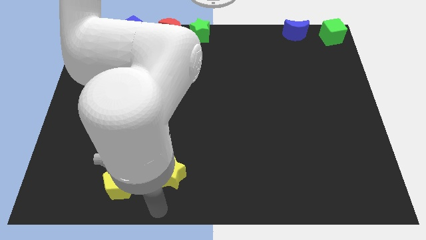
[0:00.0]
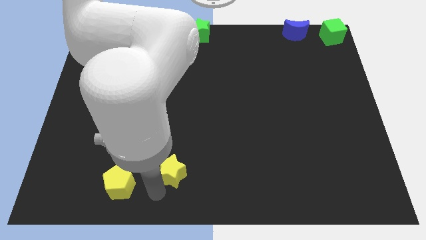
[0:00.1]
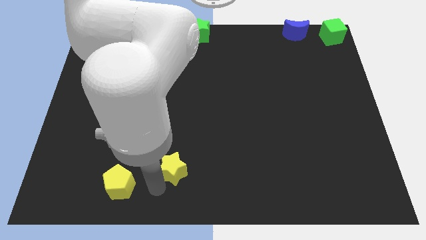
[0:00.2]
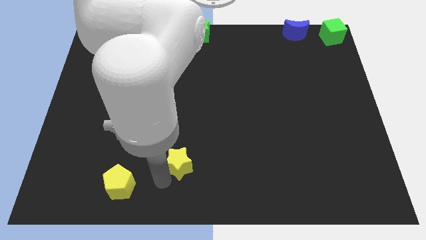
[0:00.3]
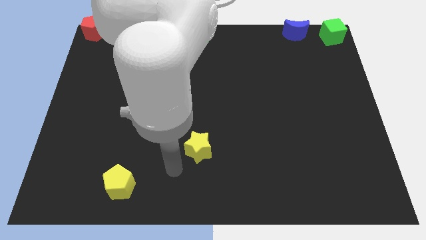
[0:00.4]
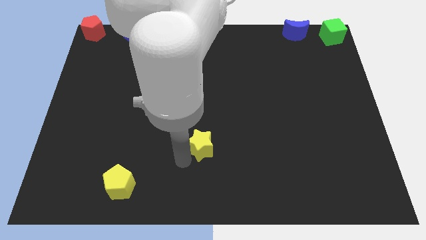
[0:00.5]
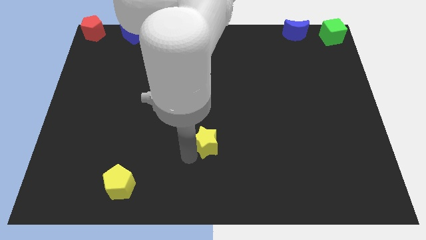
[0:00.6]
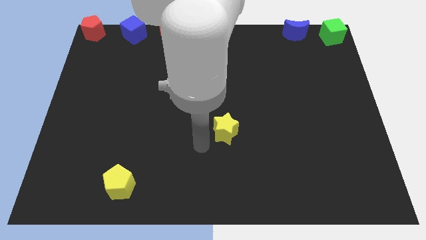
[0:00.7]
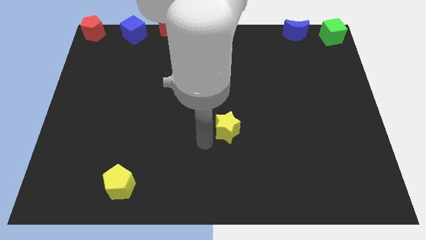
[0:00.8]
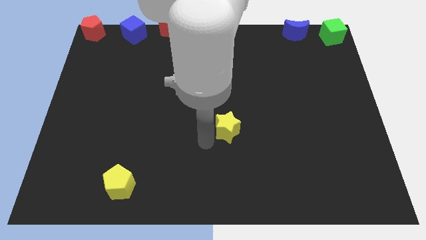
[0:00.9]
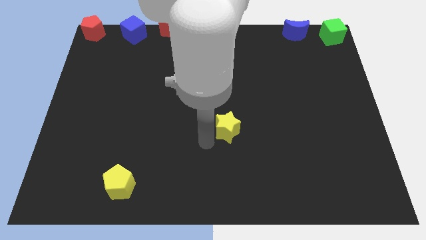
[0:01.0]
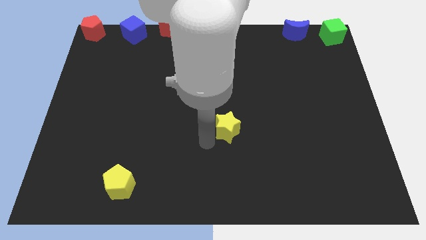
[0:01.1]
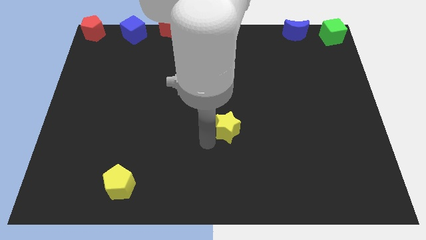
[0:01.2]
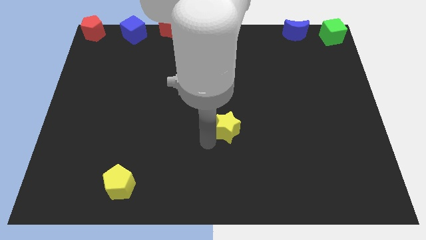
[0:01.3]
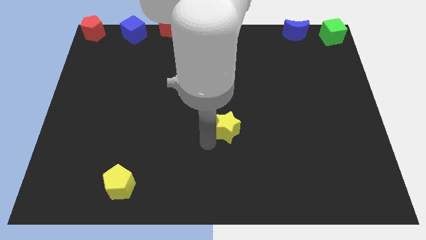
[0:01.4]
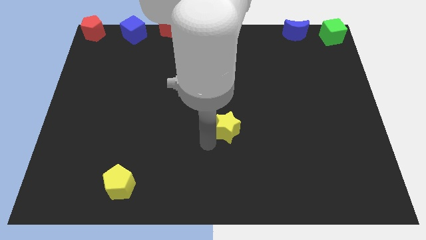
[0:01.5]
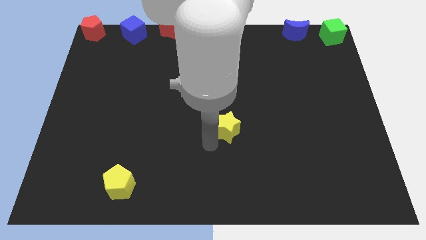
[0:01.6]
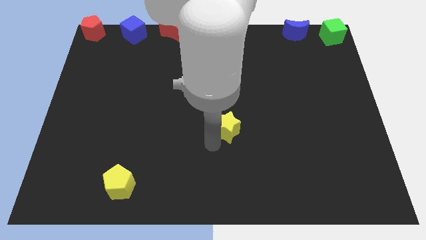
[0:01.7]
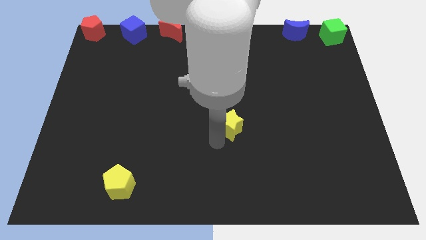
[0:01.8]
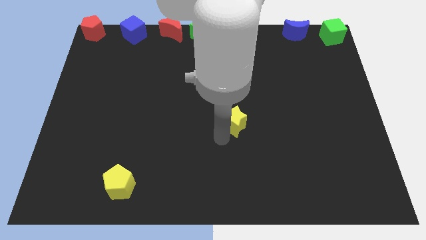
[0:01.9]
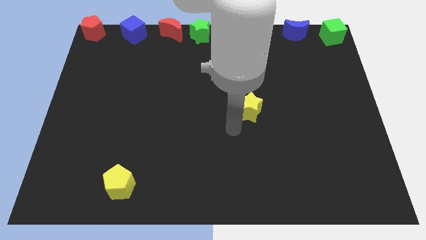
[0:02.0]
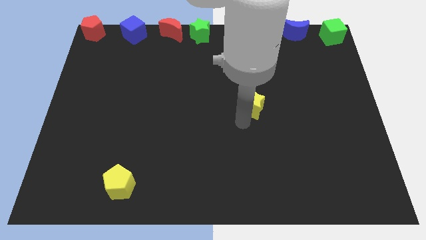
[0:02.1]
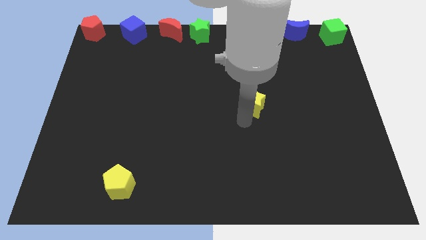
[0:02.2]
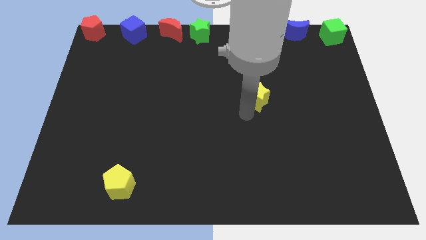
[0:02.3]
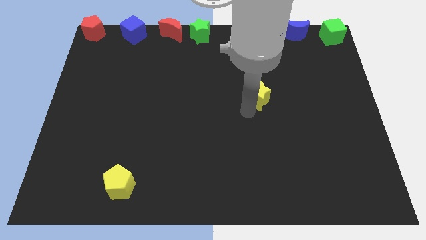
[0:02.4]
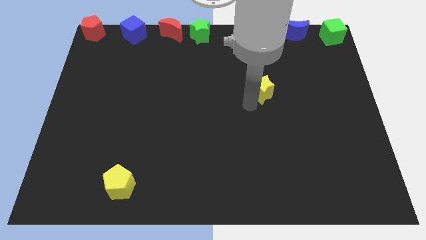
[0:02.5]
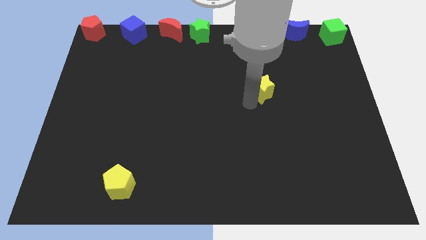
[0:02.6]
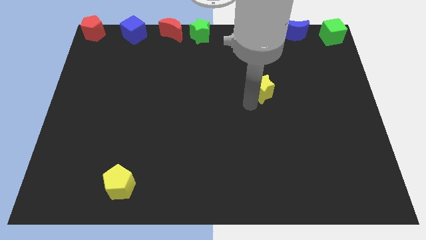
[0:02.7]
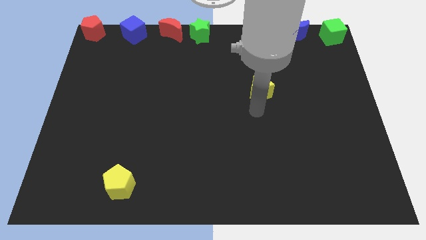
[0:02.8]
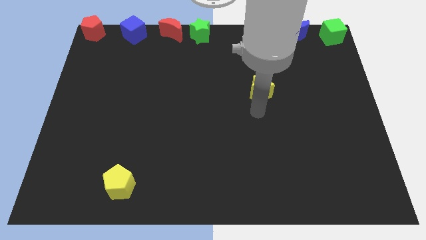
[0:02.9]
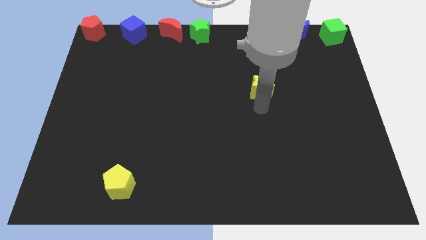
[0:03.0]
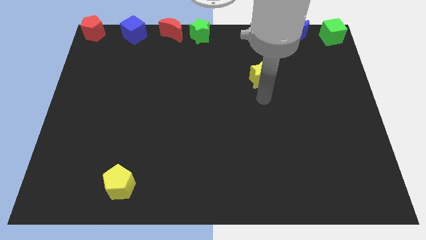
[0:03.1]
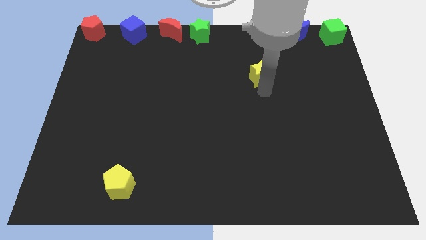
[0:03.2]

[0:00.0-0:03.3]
slide the yellow star towards the top side of the board

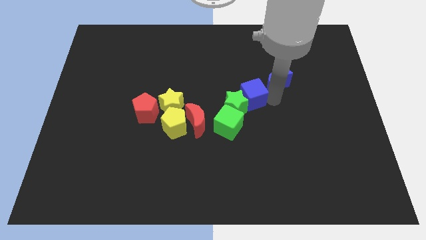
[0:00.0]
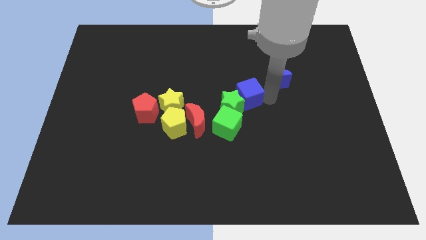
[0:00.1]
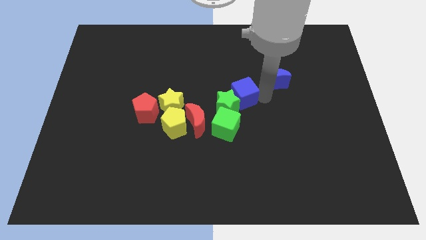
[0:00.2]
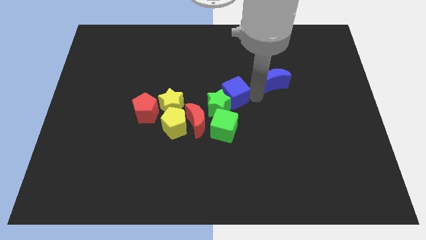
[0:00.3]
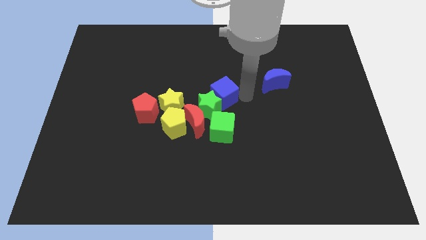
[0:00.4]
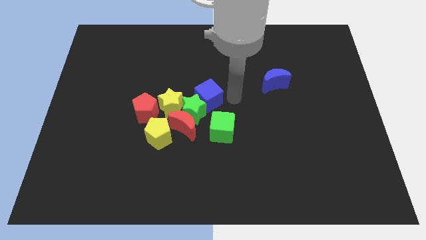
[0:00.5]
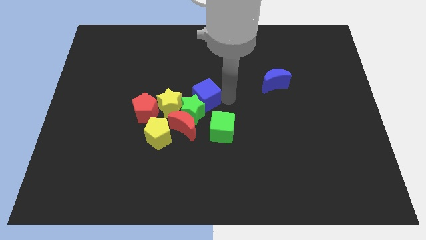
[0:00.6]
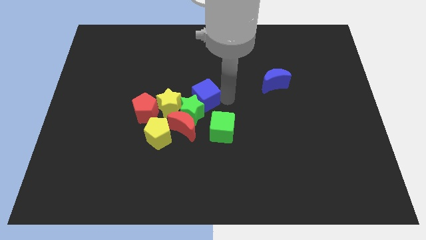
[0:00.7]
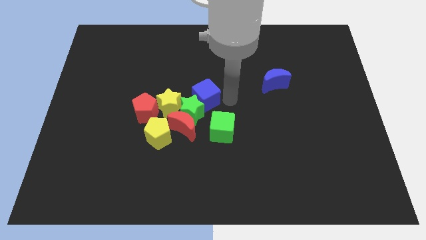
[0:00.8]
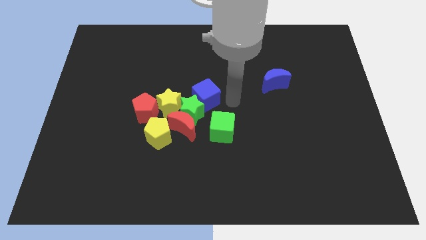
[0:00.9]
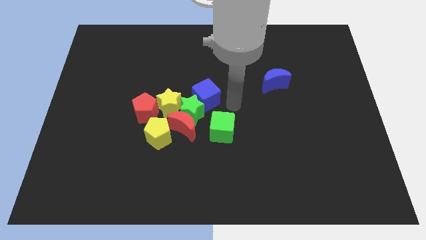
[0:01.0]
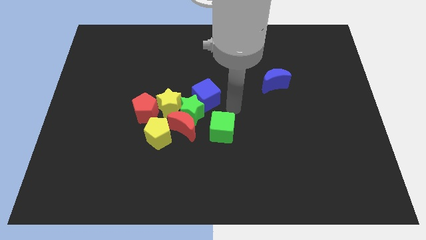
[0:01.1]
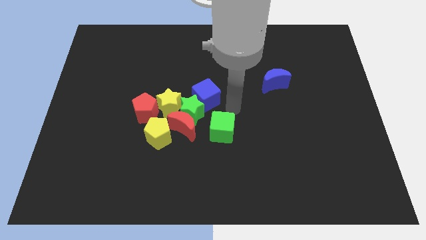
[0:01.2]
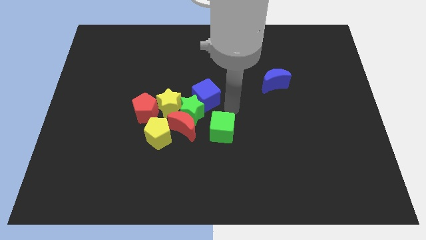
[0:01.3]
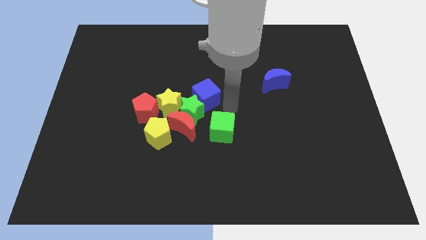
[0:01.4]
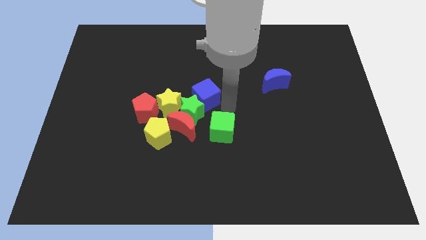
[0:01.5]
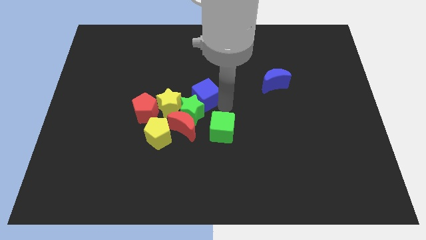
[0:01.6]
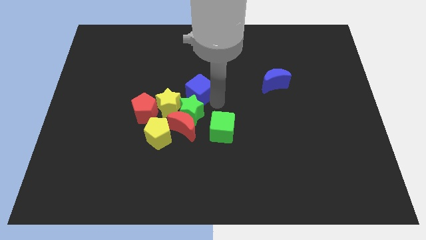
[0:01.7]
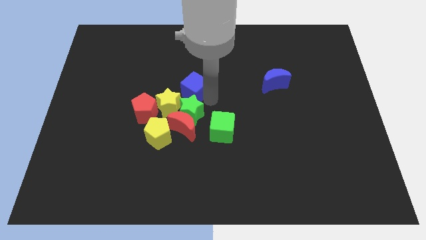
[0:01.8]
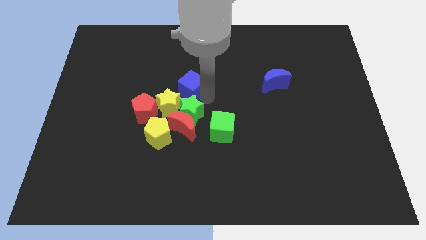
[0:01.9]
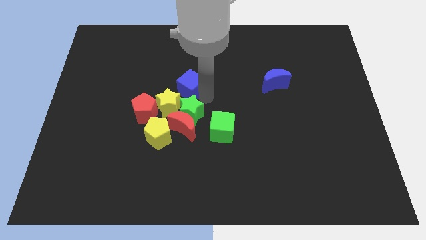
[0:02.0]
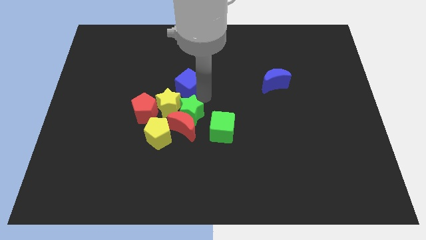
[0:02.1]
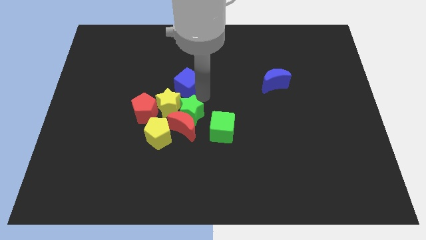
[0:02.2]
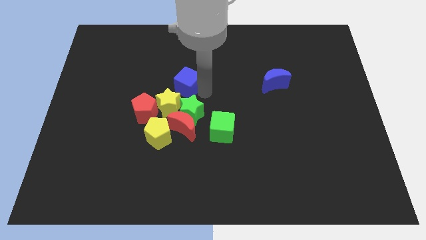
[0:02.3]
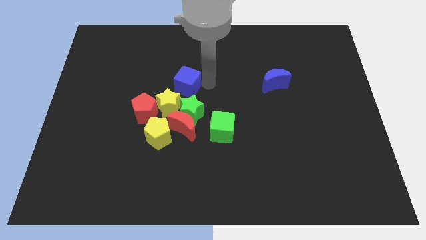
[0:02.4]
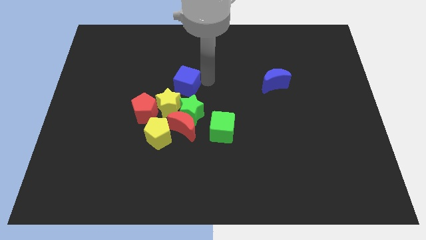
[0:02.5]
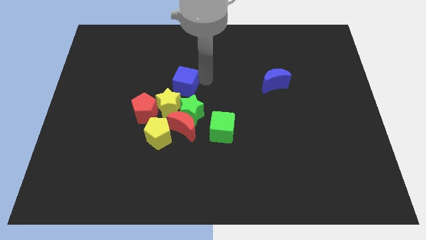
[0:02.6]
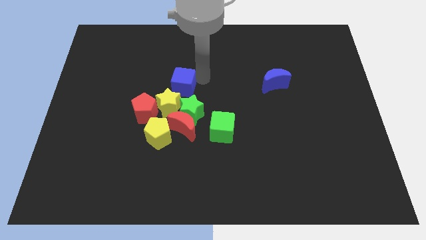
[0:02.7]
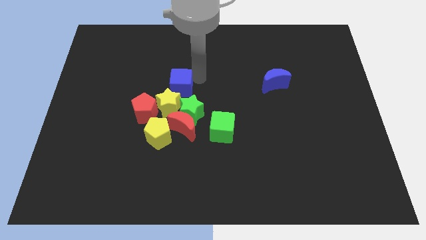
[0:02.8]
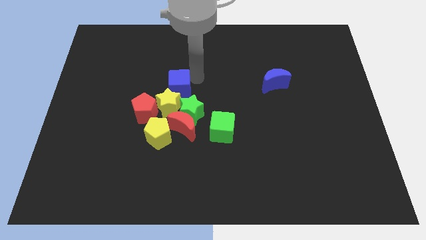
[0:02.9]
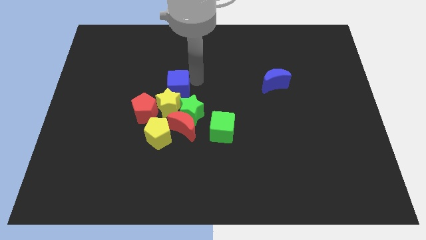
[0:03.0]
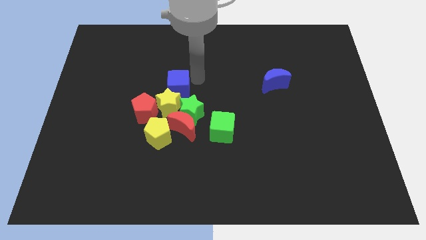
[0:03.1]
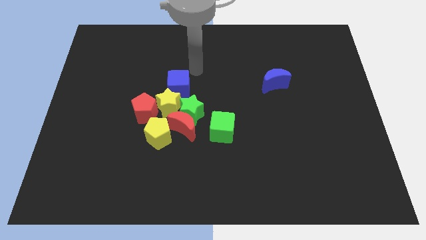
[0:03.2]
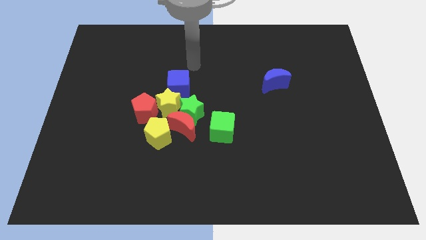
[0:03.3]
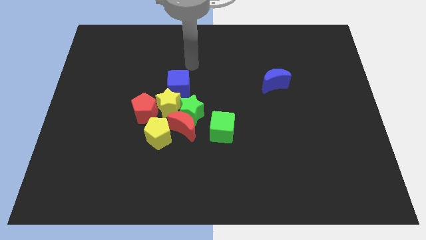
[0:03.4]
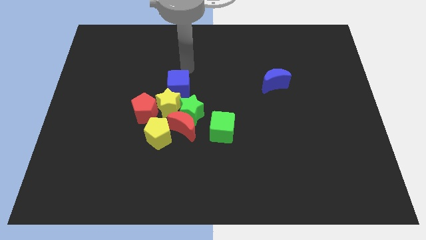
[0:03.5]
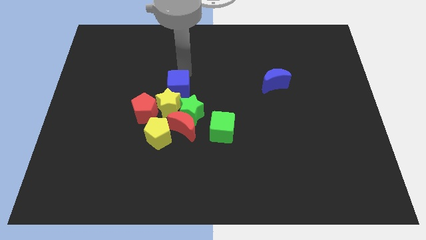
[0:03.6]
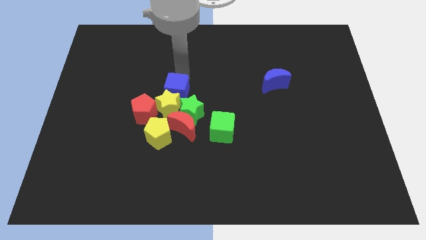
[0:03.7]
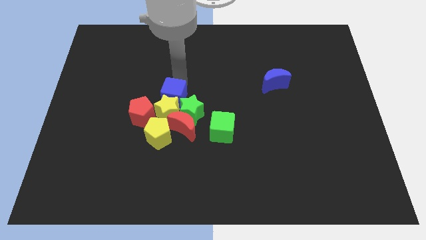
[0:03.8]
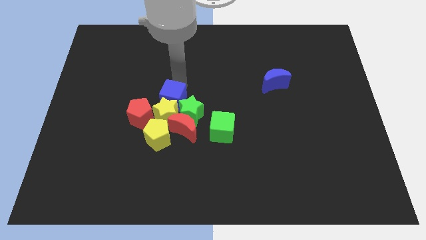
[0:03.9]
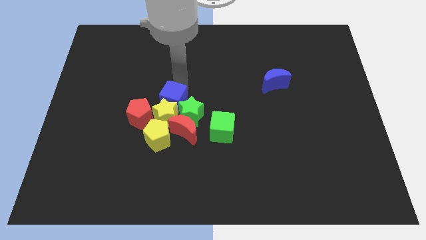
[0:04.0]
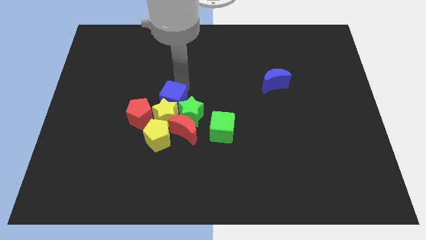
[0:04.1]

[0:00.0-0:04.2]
push the blue cube into the yellow star

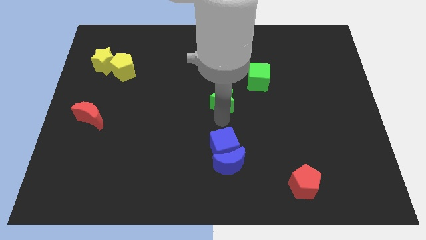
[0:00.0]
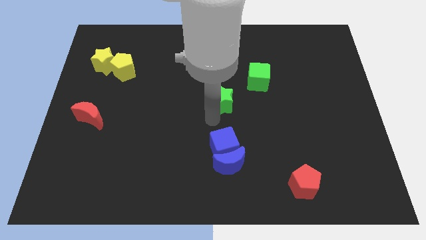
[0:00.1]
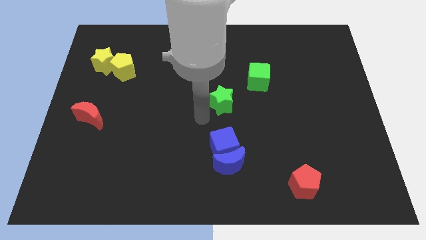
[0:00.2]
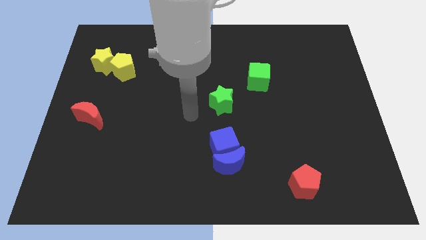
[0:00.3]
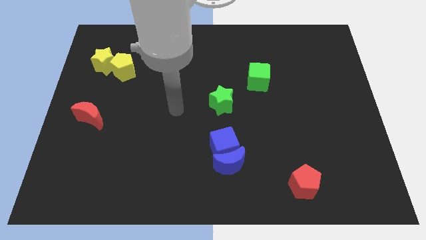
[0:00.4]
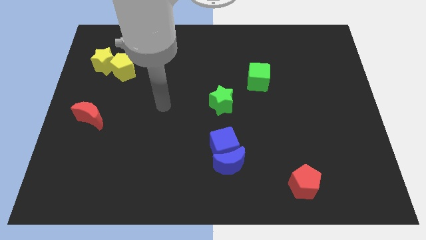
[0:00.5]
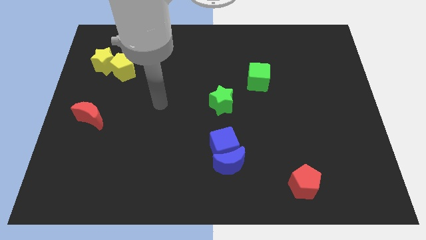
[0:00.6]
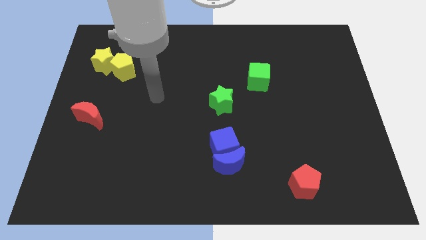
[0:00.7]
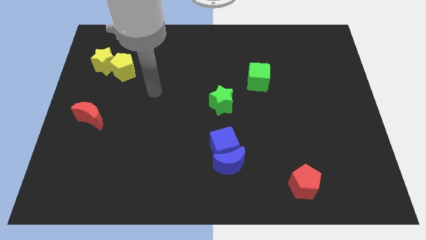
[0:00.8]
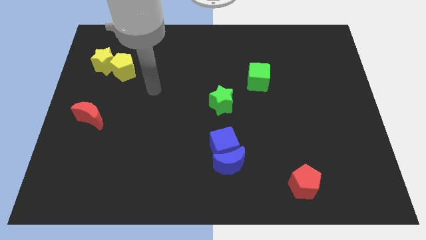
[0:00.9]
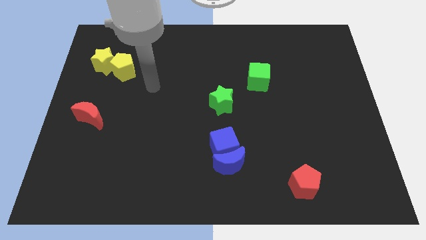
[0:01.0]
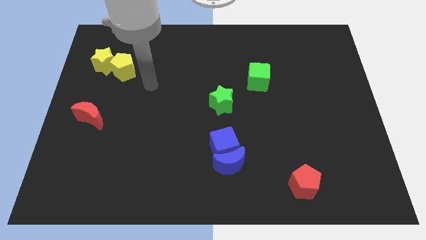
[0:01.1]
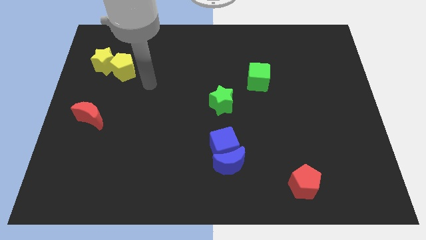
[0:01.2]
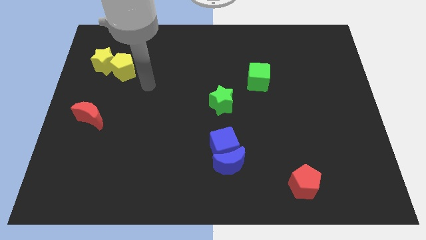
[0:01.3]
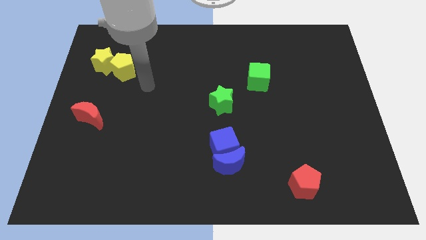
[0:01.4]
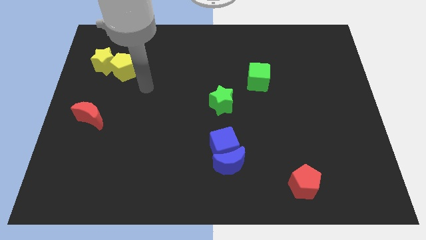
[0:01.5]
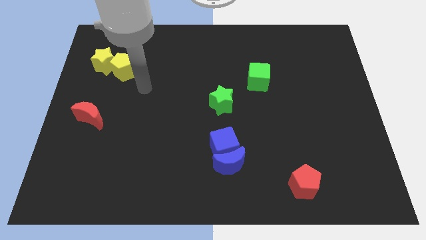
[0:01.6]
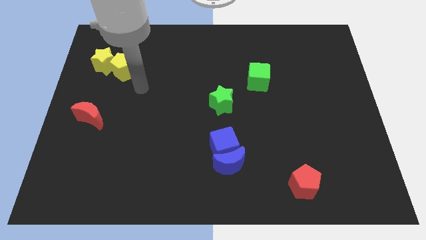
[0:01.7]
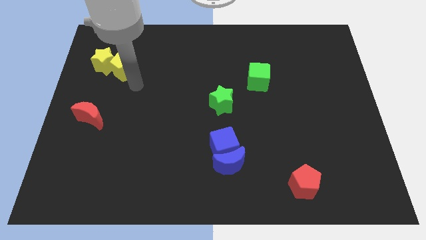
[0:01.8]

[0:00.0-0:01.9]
point the arm to the bottom right of the yellow pentagon
